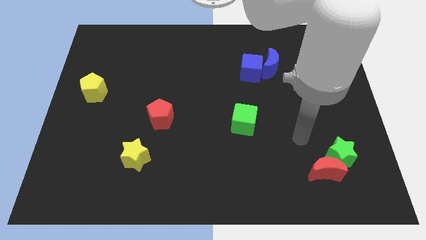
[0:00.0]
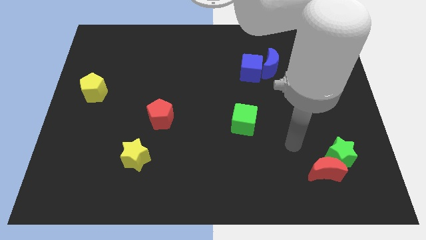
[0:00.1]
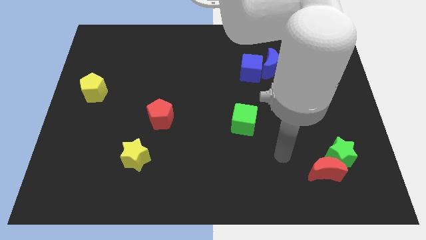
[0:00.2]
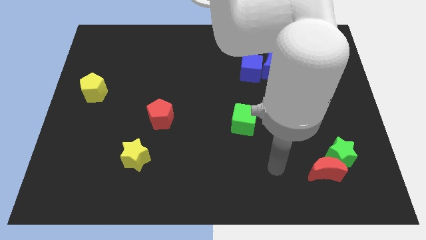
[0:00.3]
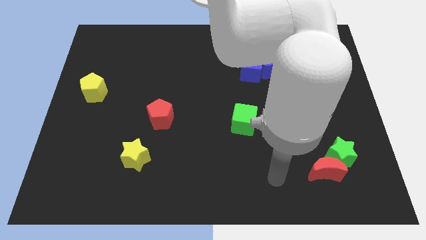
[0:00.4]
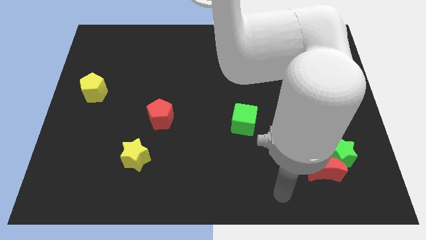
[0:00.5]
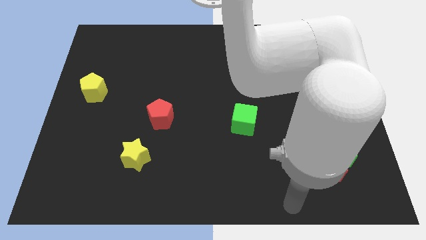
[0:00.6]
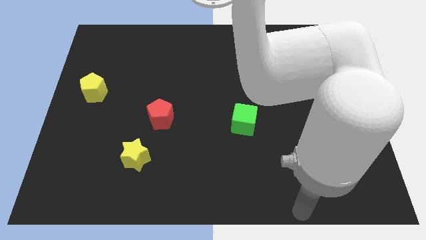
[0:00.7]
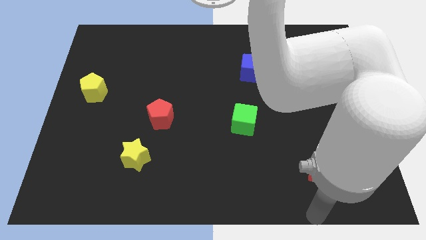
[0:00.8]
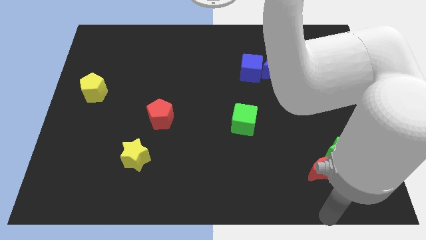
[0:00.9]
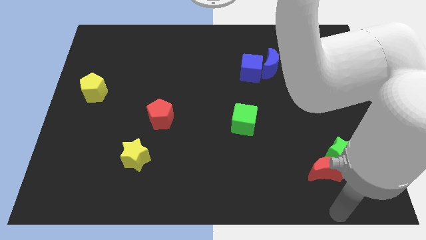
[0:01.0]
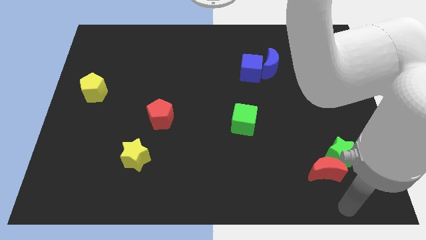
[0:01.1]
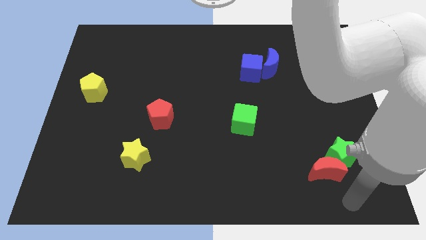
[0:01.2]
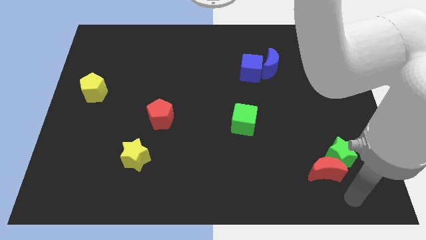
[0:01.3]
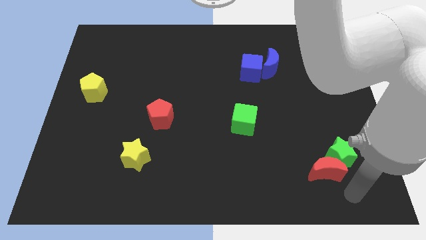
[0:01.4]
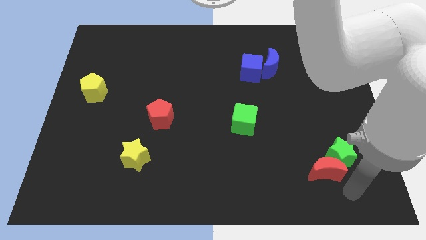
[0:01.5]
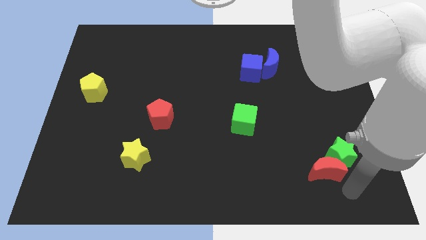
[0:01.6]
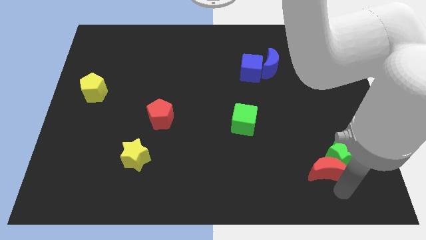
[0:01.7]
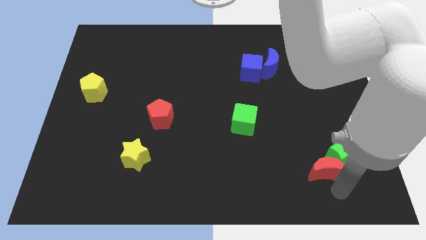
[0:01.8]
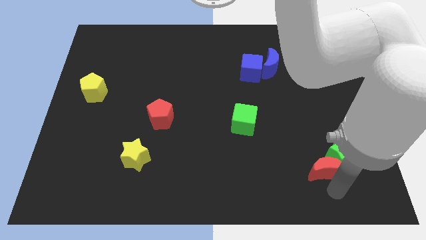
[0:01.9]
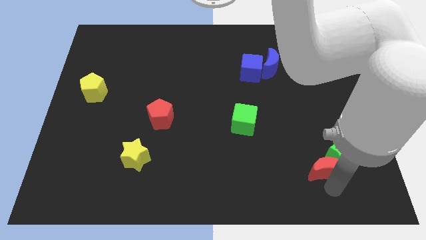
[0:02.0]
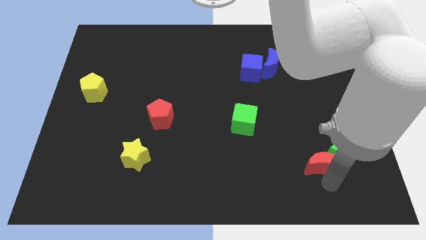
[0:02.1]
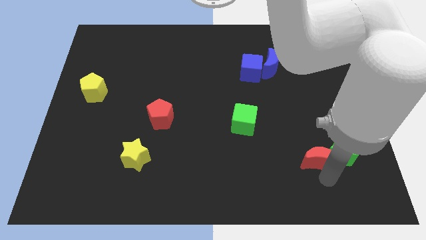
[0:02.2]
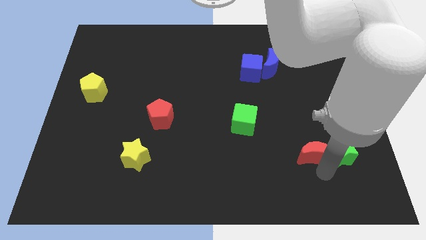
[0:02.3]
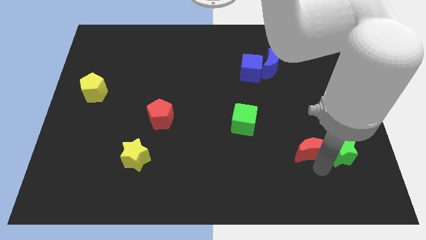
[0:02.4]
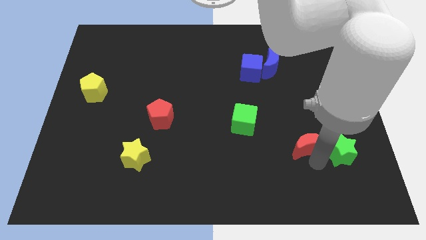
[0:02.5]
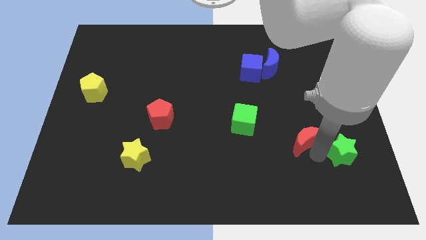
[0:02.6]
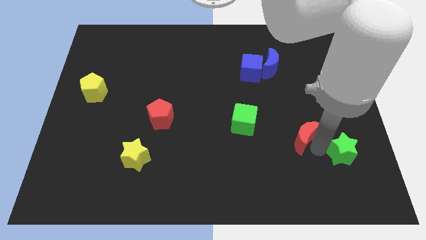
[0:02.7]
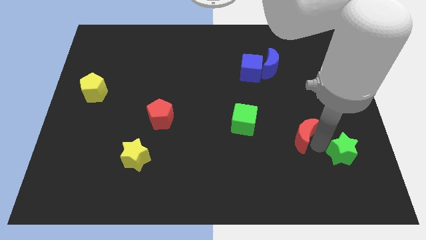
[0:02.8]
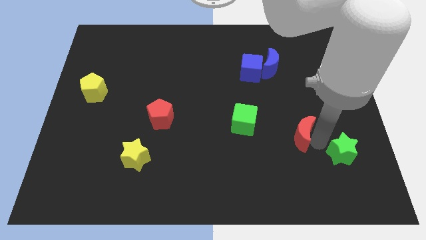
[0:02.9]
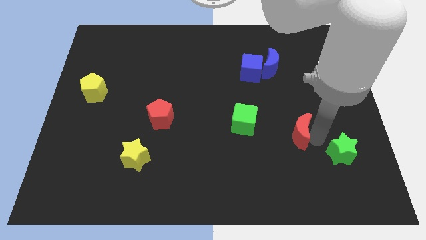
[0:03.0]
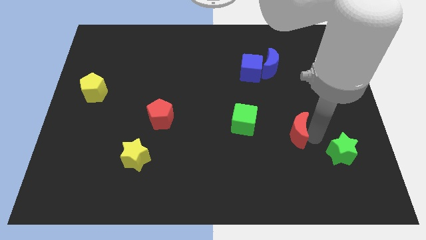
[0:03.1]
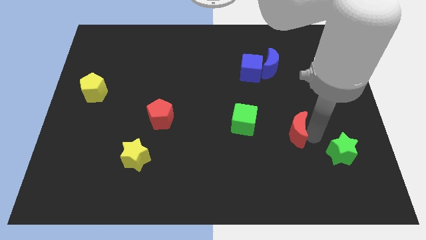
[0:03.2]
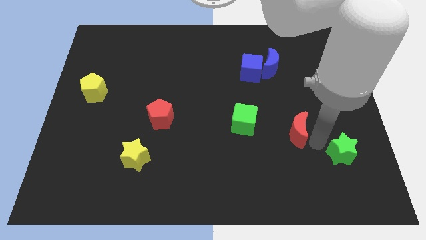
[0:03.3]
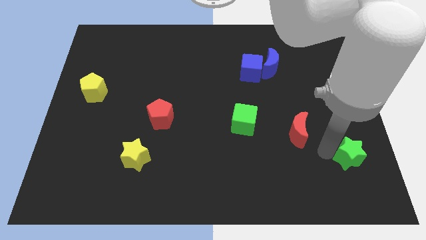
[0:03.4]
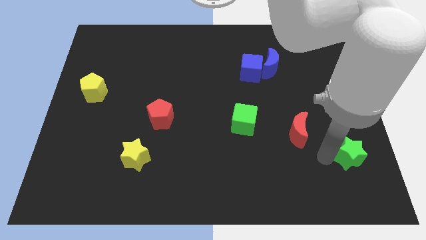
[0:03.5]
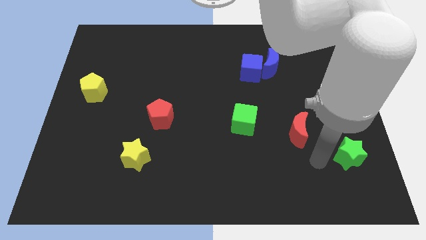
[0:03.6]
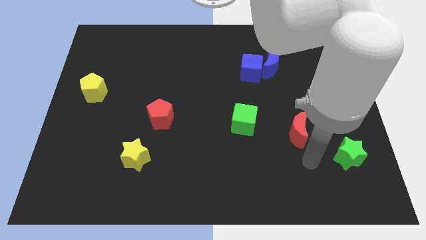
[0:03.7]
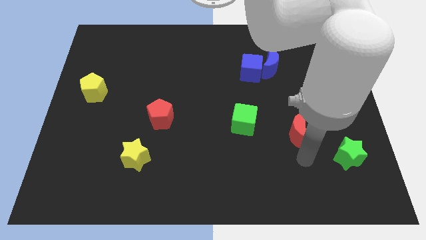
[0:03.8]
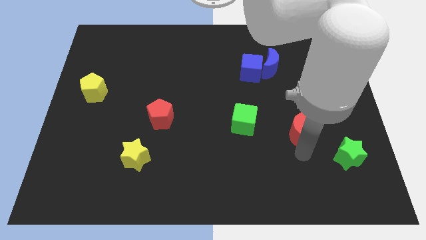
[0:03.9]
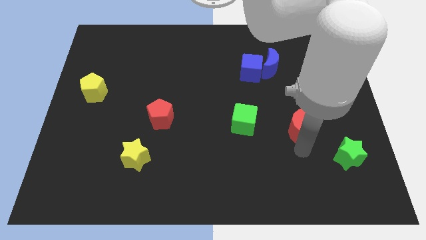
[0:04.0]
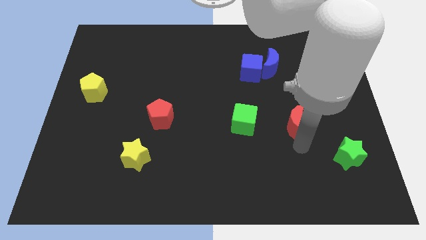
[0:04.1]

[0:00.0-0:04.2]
push the red crescent to the right of the green cube

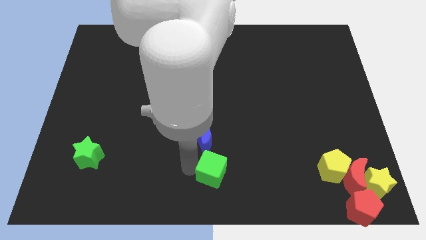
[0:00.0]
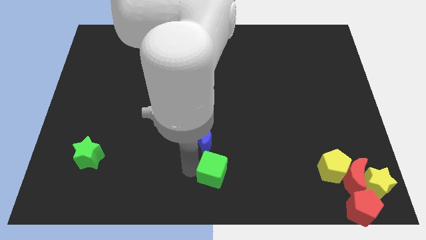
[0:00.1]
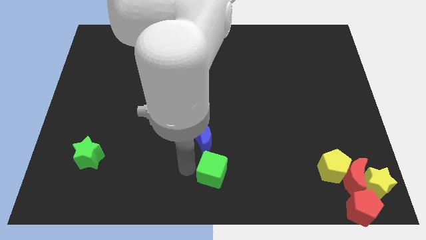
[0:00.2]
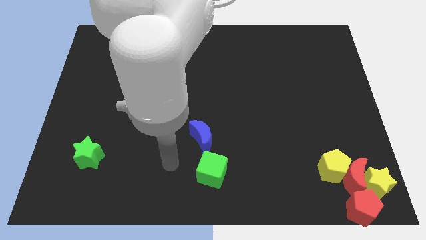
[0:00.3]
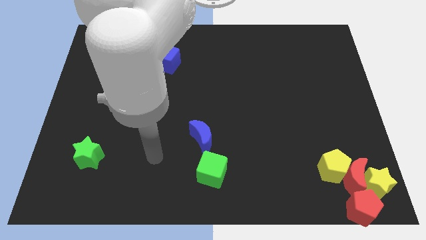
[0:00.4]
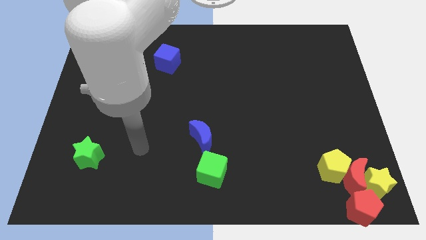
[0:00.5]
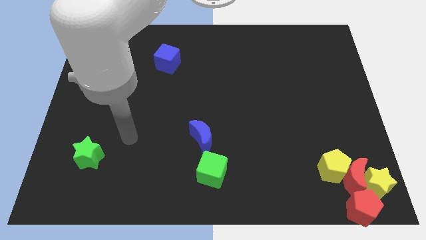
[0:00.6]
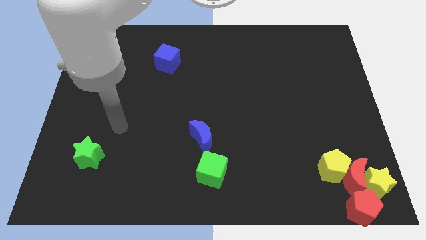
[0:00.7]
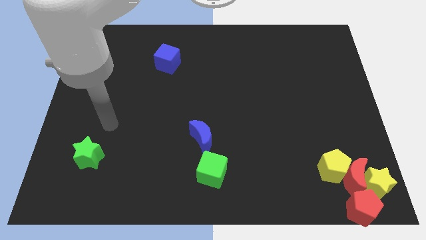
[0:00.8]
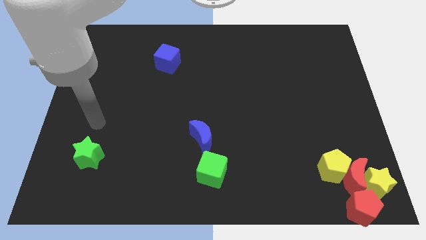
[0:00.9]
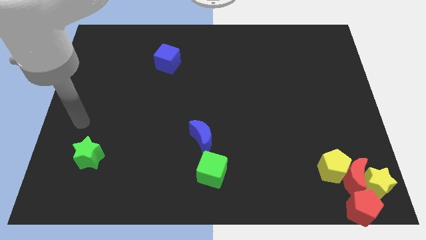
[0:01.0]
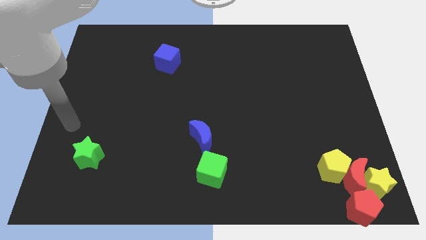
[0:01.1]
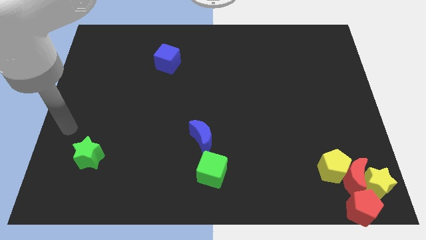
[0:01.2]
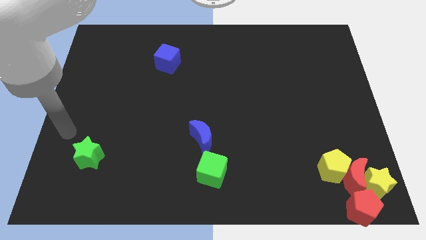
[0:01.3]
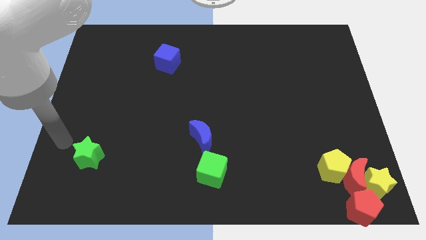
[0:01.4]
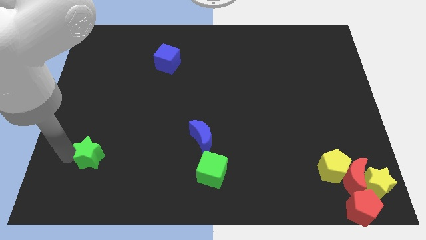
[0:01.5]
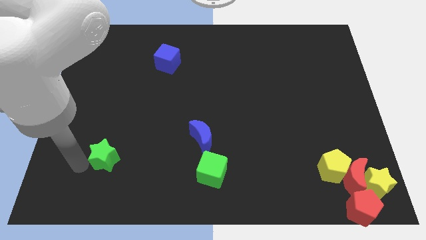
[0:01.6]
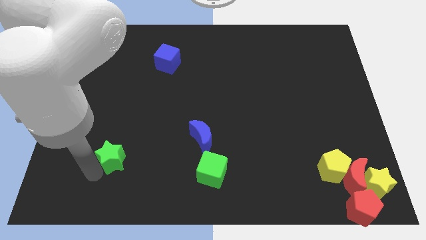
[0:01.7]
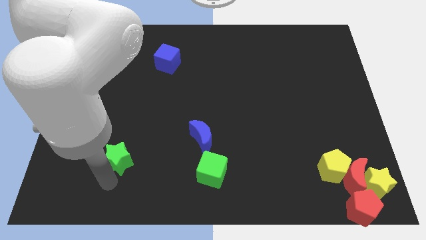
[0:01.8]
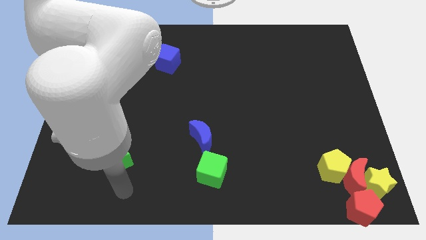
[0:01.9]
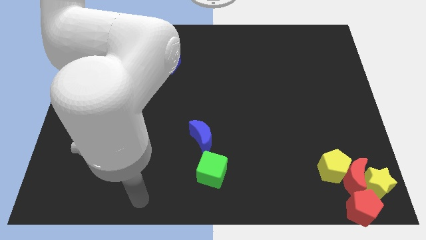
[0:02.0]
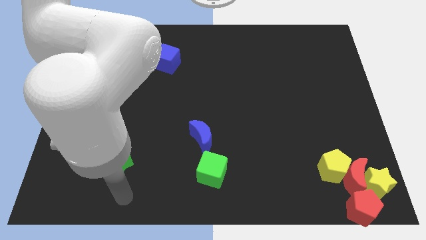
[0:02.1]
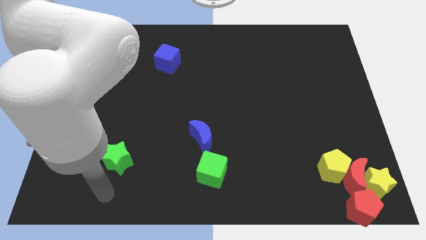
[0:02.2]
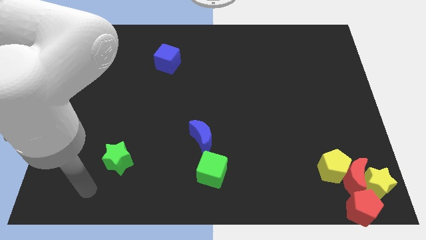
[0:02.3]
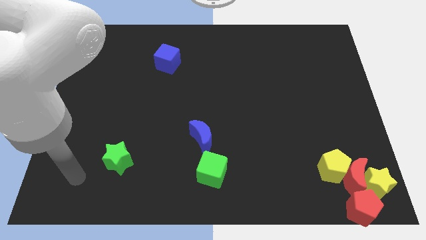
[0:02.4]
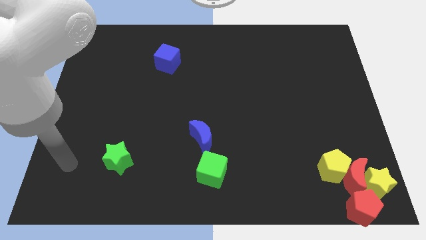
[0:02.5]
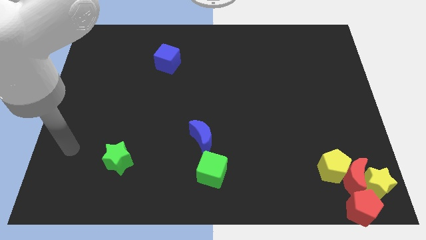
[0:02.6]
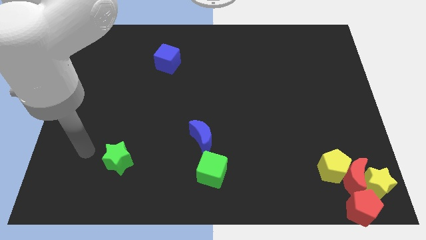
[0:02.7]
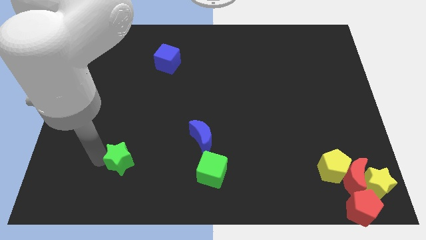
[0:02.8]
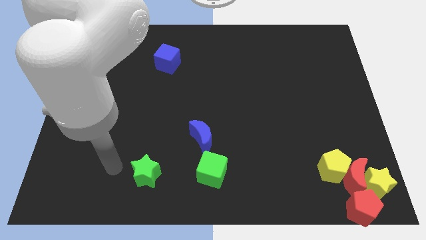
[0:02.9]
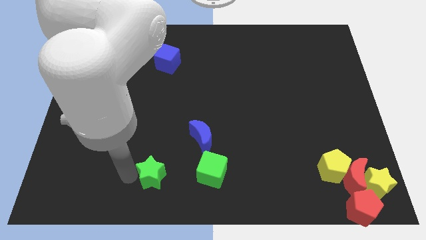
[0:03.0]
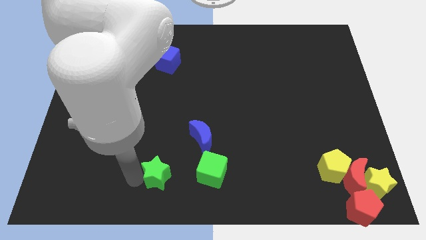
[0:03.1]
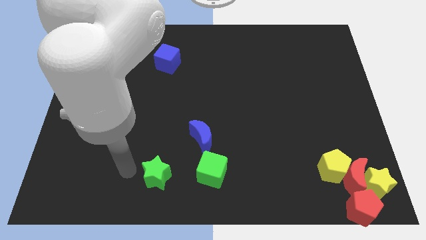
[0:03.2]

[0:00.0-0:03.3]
move the green star parallel to the green cube

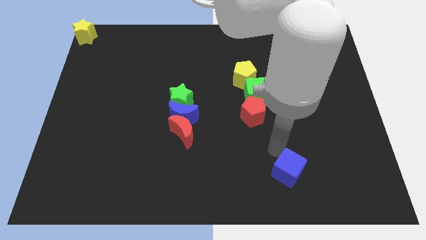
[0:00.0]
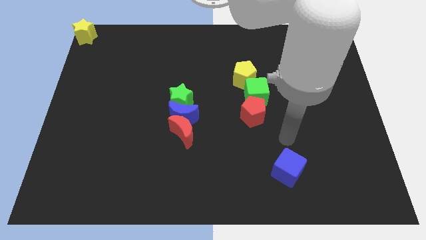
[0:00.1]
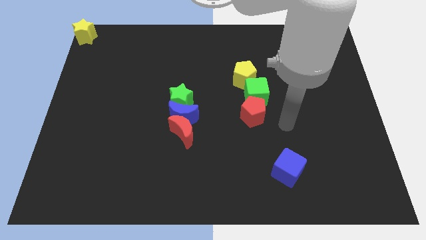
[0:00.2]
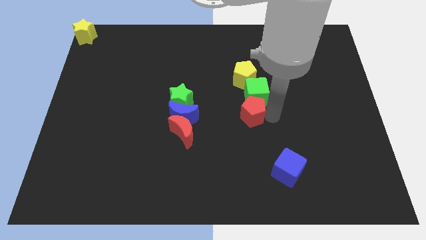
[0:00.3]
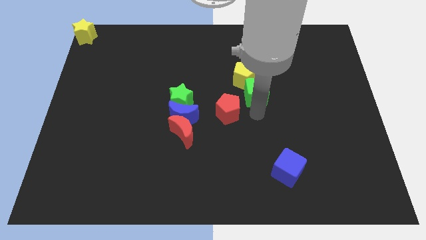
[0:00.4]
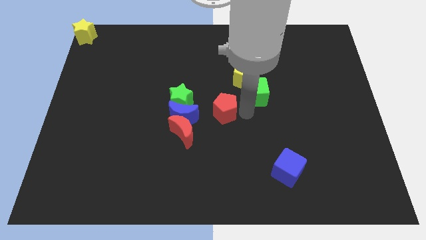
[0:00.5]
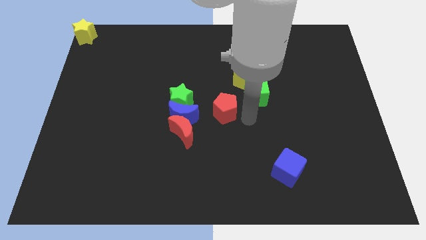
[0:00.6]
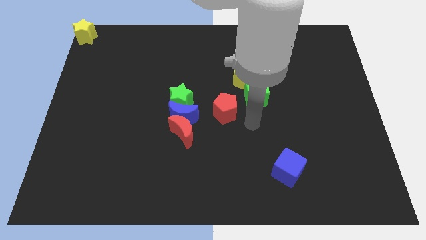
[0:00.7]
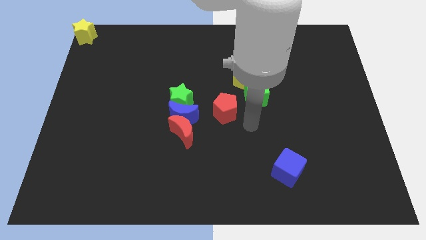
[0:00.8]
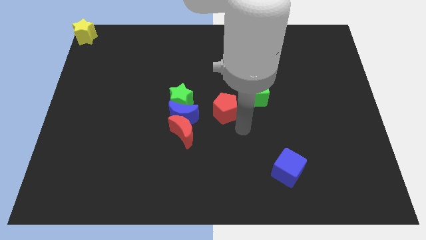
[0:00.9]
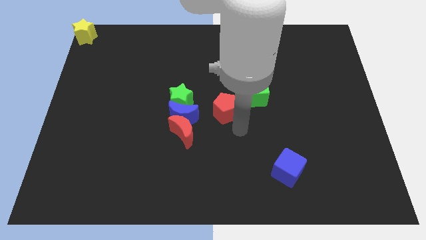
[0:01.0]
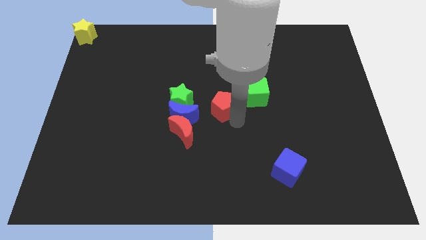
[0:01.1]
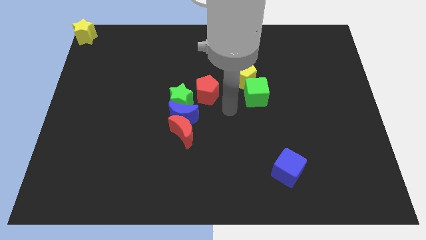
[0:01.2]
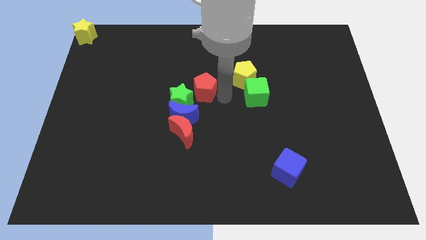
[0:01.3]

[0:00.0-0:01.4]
put the red pentagon in between the yellow pentagon and green star

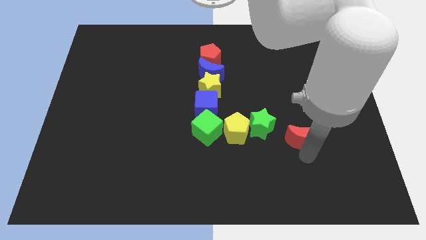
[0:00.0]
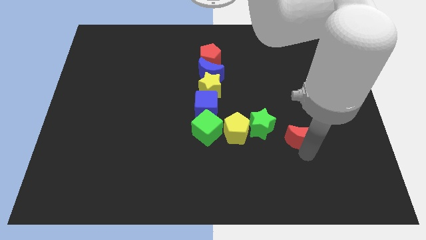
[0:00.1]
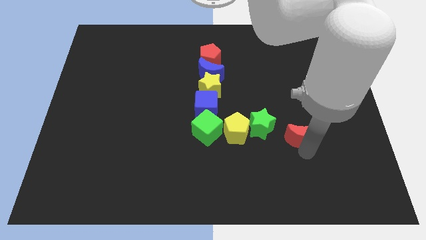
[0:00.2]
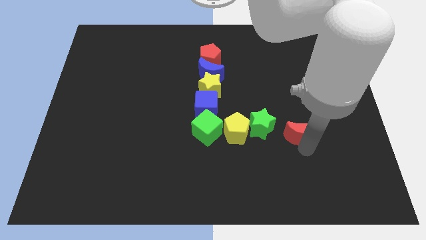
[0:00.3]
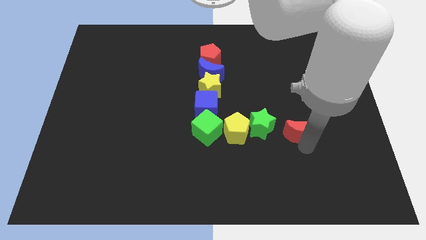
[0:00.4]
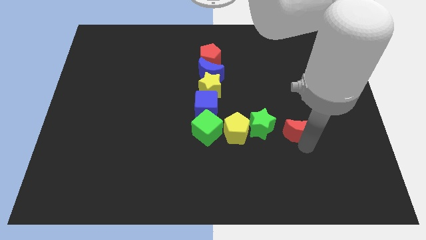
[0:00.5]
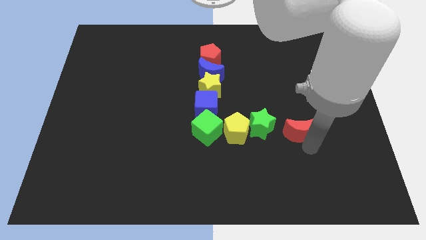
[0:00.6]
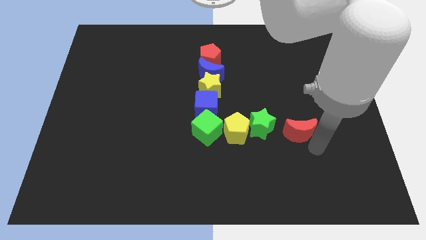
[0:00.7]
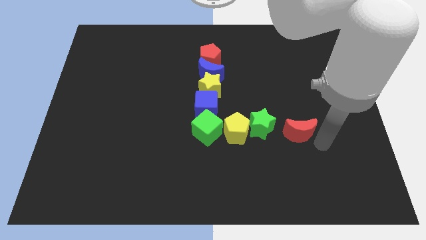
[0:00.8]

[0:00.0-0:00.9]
put the red pentagon to the right of the green star to form vertical line of blocks
